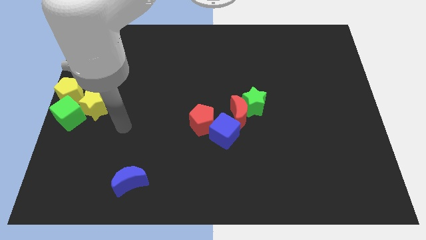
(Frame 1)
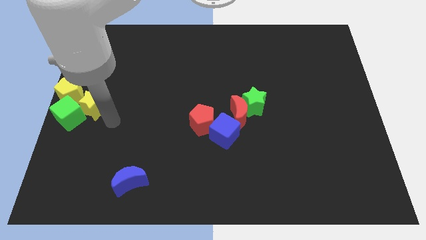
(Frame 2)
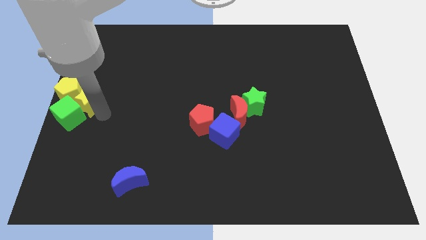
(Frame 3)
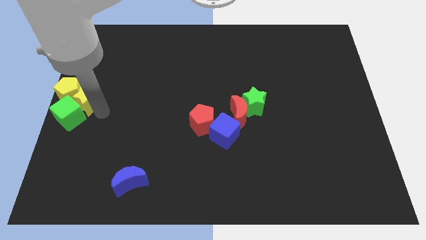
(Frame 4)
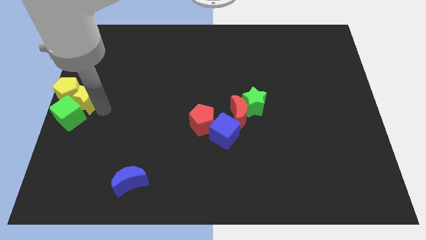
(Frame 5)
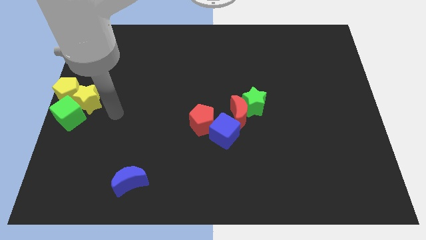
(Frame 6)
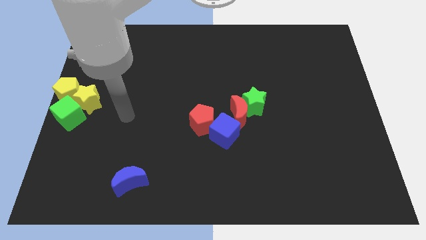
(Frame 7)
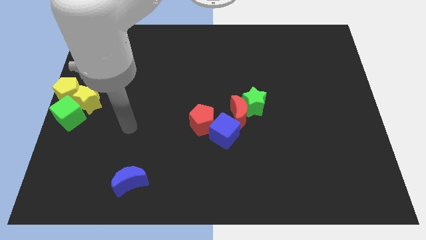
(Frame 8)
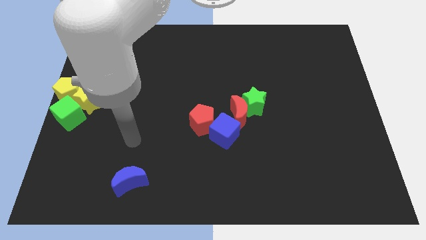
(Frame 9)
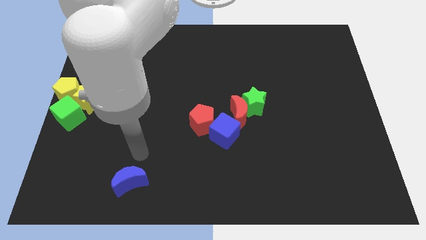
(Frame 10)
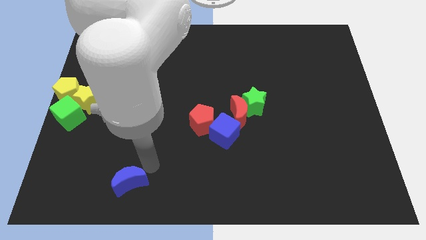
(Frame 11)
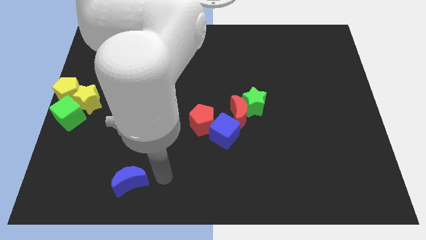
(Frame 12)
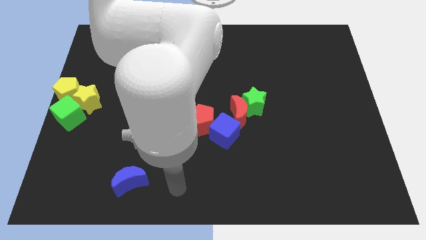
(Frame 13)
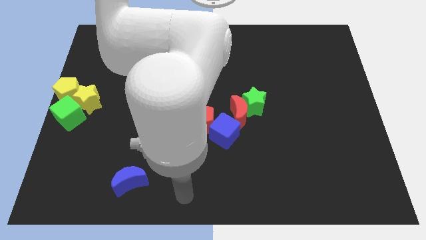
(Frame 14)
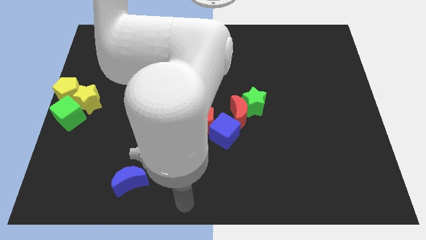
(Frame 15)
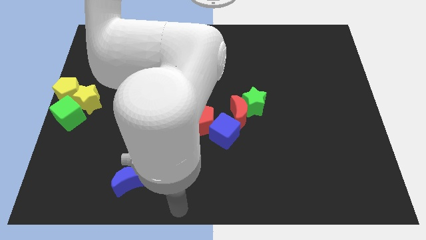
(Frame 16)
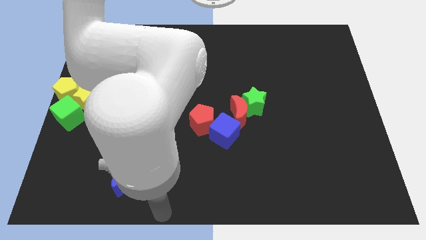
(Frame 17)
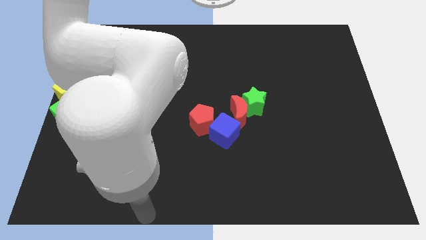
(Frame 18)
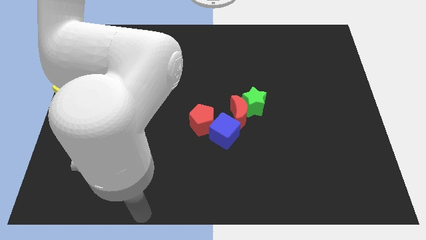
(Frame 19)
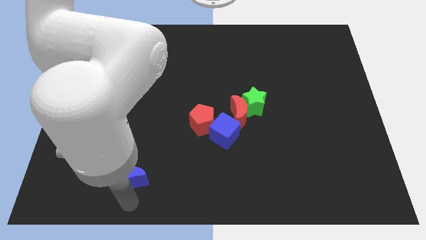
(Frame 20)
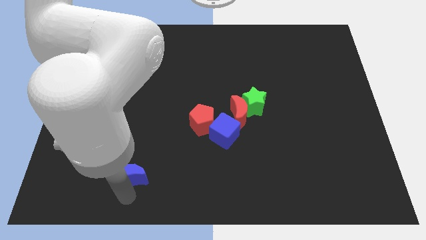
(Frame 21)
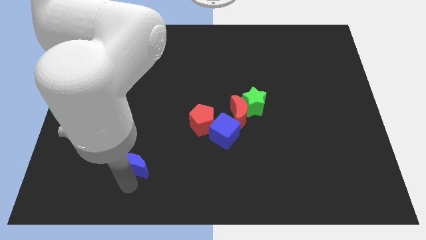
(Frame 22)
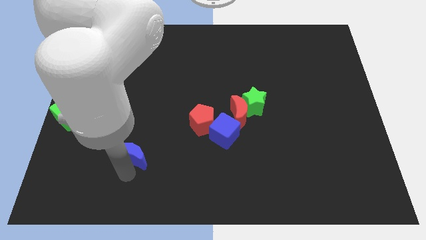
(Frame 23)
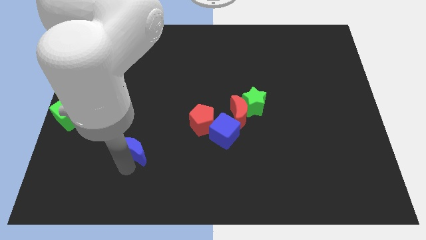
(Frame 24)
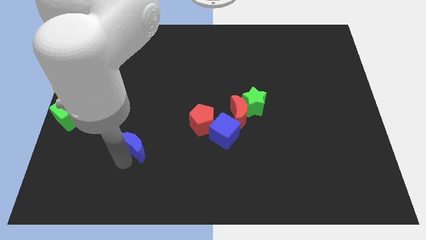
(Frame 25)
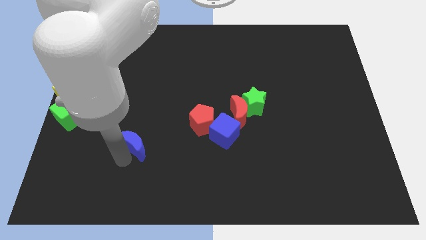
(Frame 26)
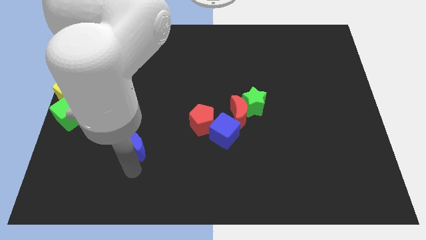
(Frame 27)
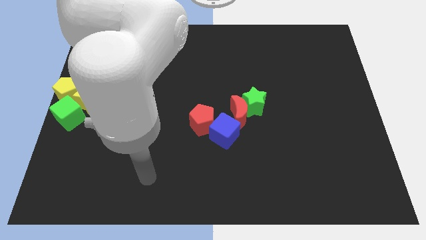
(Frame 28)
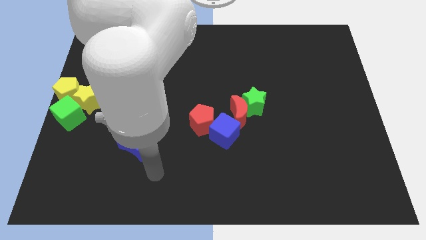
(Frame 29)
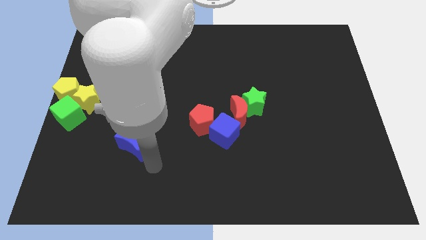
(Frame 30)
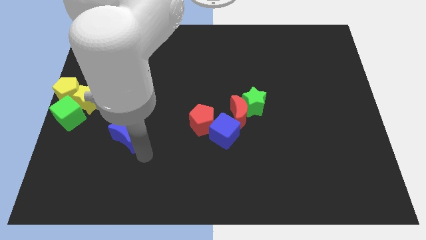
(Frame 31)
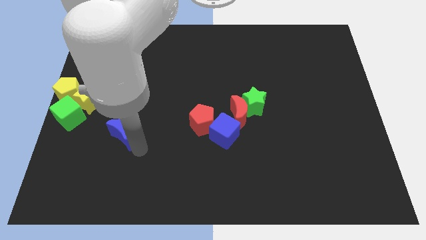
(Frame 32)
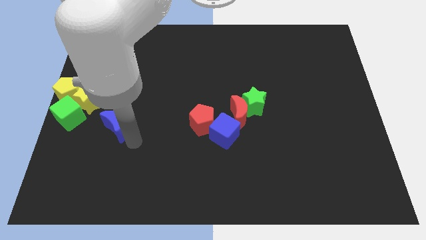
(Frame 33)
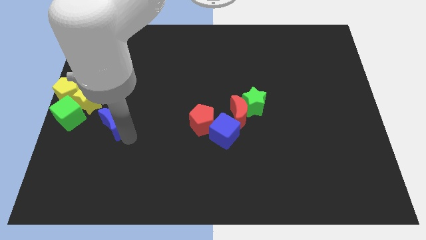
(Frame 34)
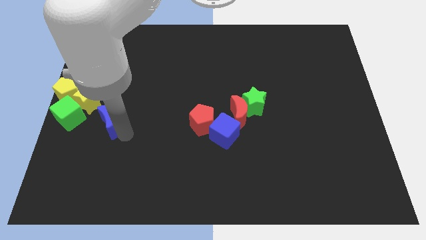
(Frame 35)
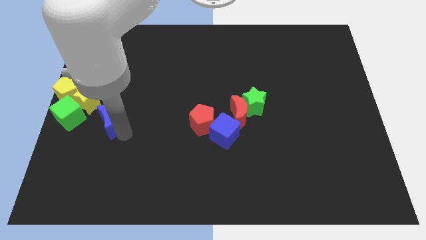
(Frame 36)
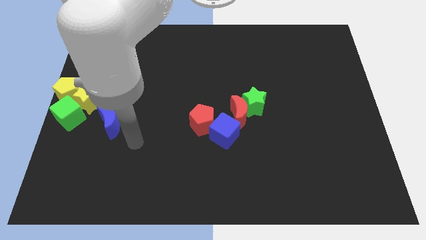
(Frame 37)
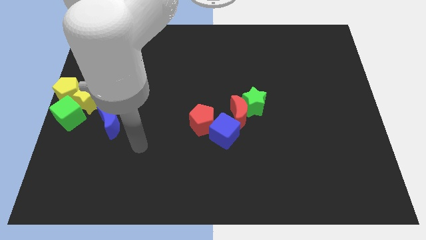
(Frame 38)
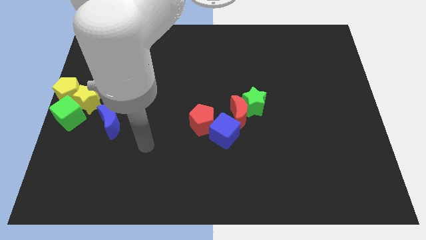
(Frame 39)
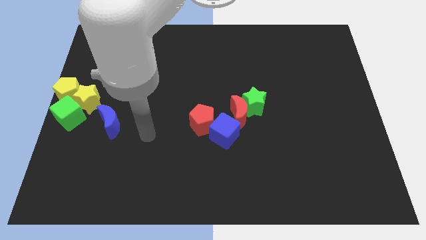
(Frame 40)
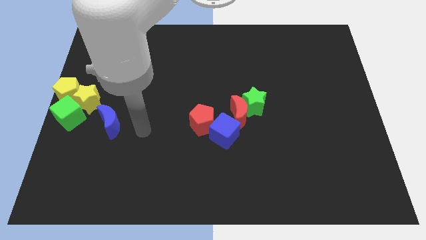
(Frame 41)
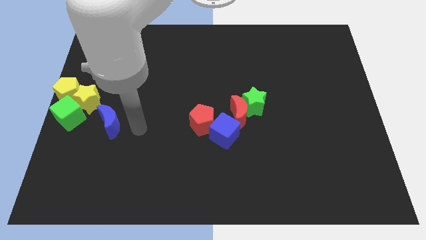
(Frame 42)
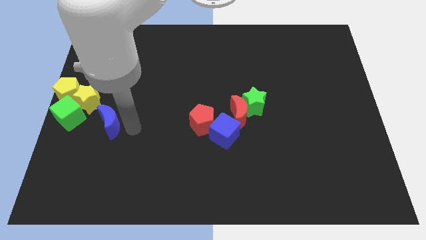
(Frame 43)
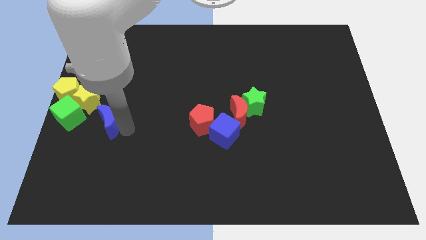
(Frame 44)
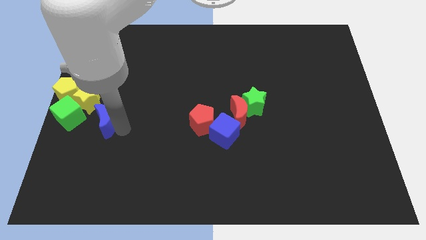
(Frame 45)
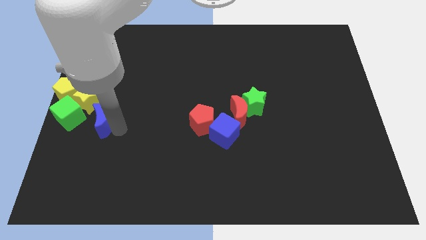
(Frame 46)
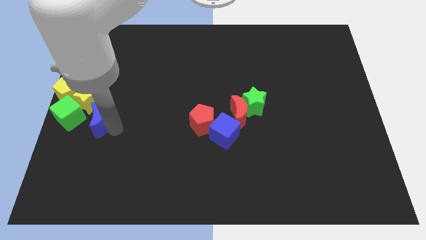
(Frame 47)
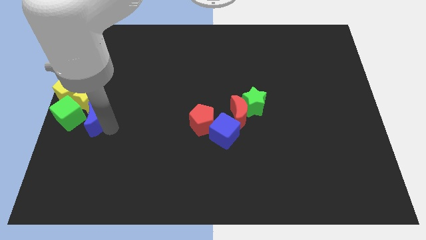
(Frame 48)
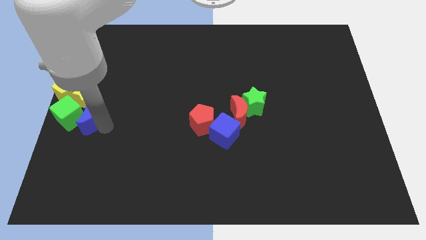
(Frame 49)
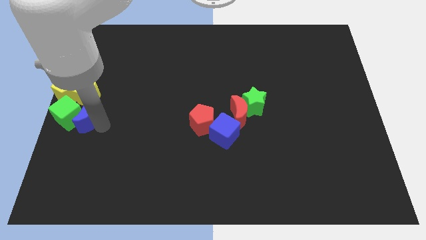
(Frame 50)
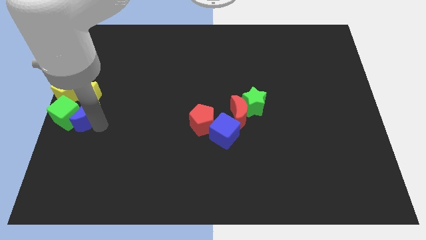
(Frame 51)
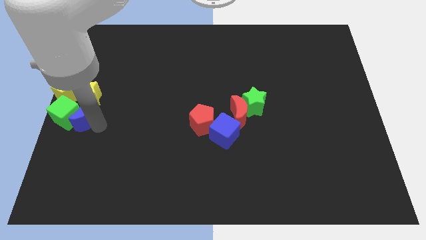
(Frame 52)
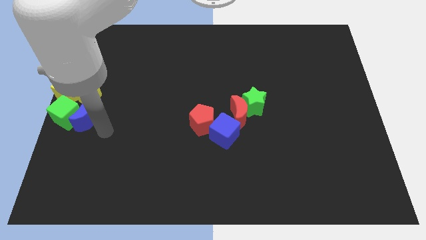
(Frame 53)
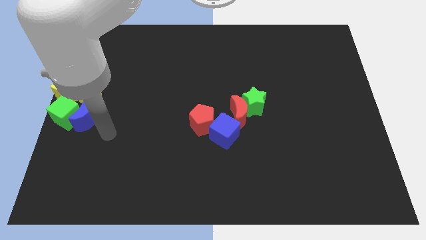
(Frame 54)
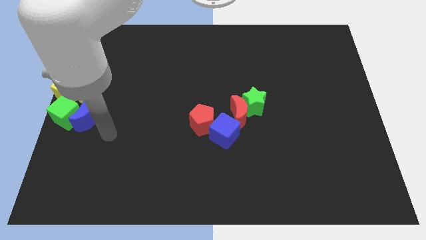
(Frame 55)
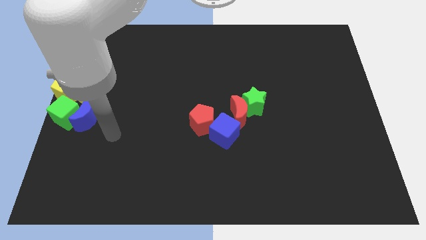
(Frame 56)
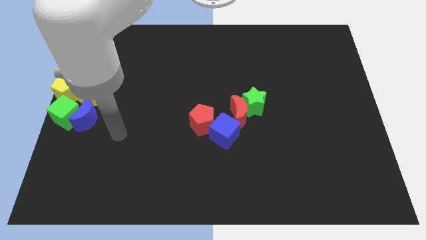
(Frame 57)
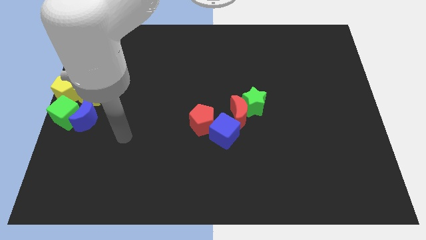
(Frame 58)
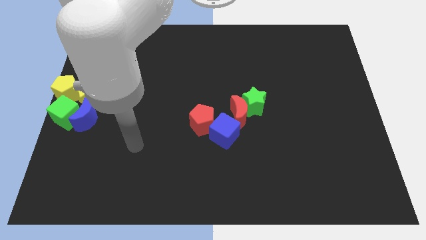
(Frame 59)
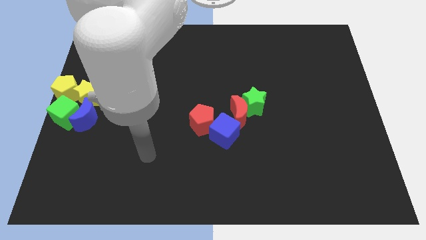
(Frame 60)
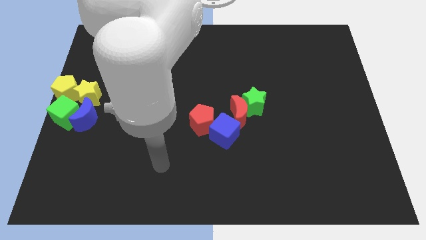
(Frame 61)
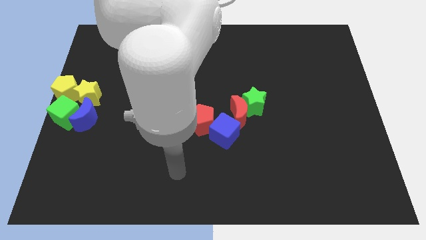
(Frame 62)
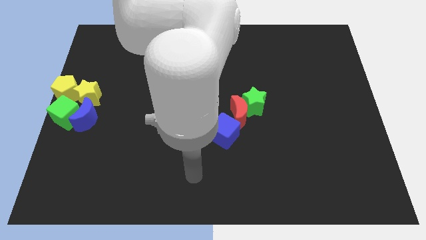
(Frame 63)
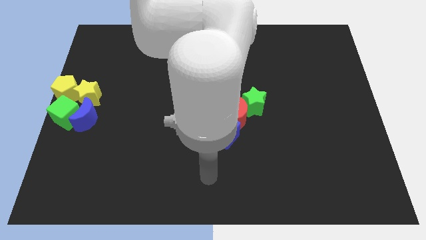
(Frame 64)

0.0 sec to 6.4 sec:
push the blue crescent into the right of the green cube

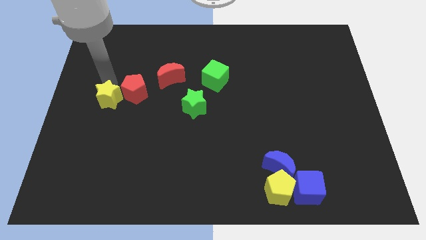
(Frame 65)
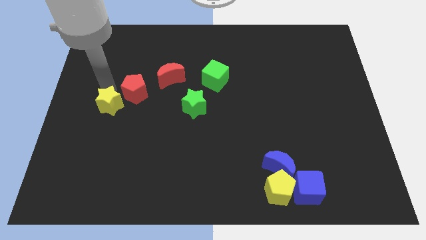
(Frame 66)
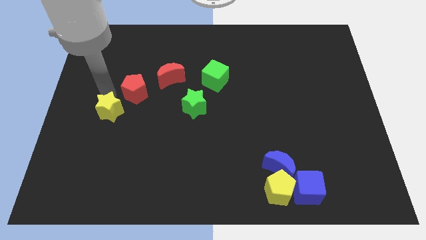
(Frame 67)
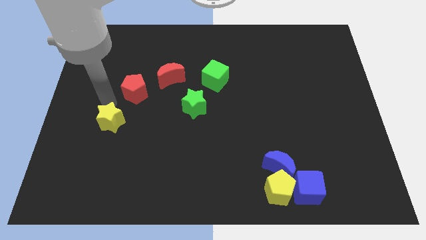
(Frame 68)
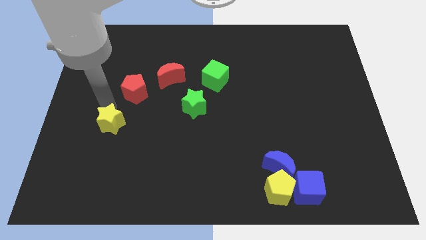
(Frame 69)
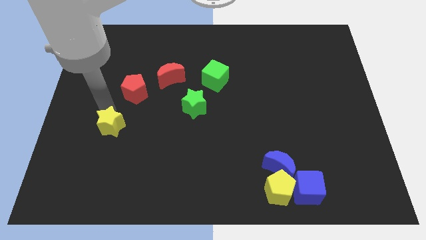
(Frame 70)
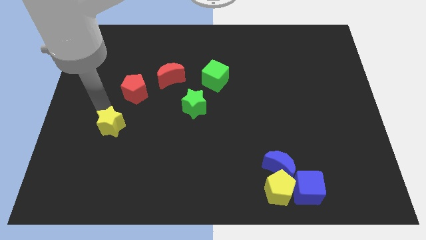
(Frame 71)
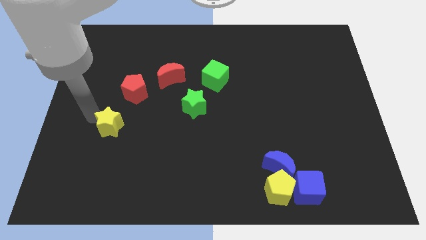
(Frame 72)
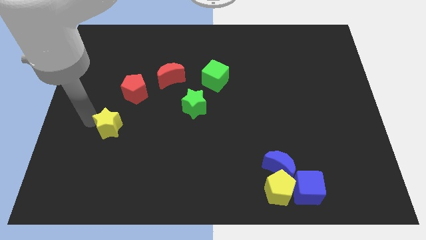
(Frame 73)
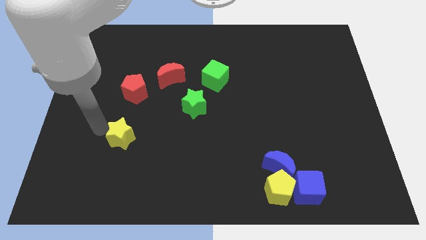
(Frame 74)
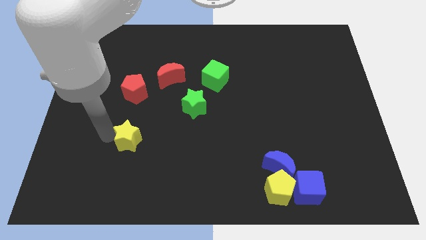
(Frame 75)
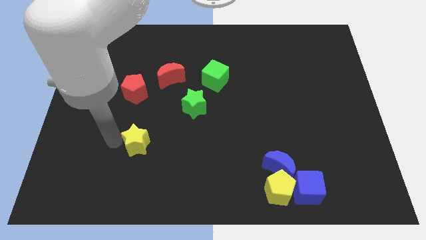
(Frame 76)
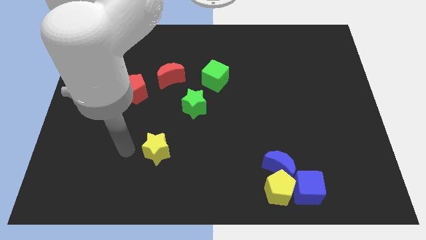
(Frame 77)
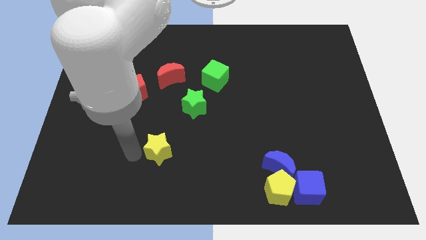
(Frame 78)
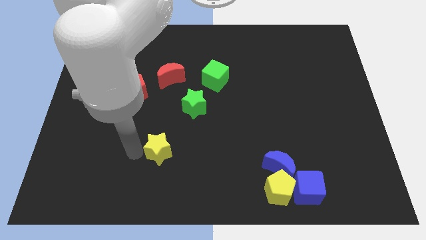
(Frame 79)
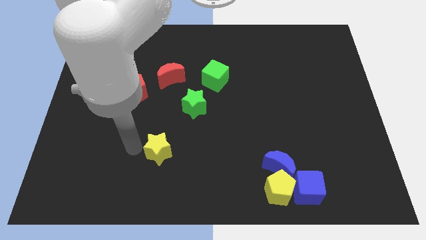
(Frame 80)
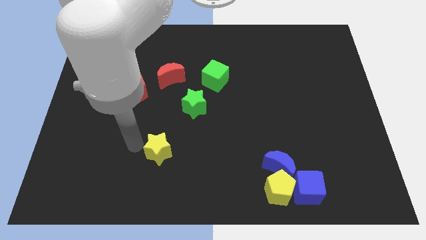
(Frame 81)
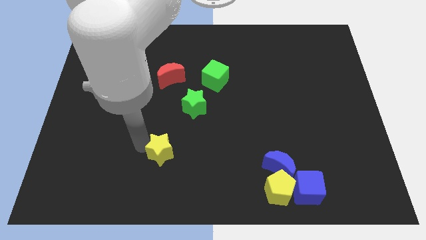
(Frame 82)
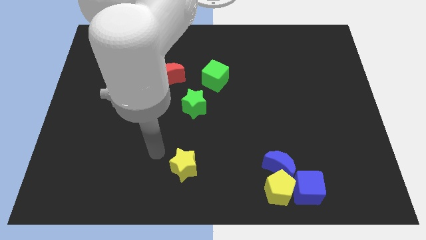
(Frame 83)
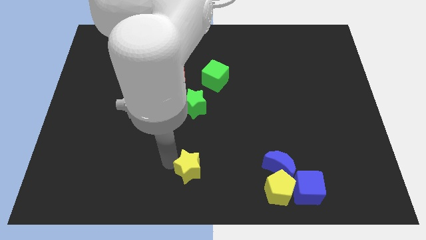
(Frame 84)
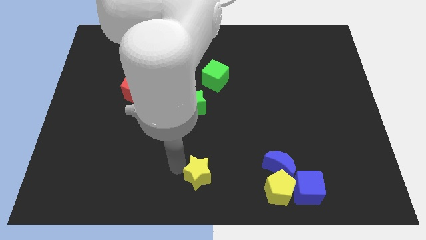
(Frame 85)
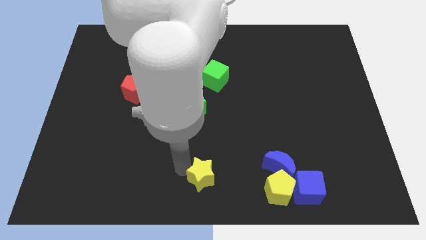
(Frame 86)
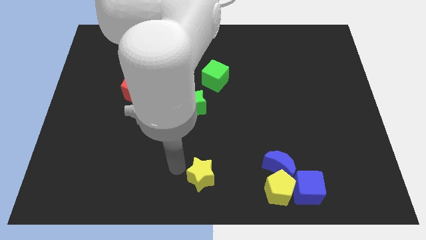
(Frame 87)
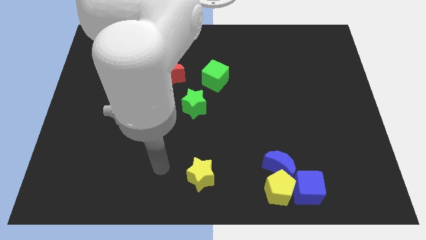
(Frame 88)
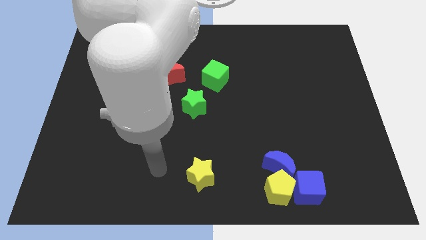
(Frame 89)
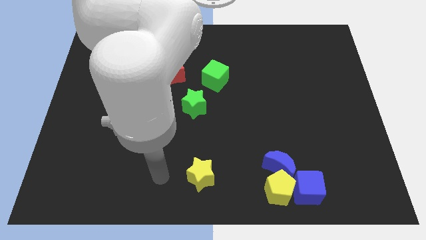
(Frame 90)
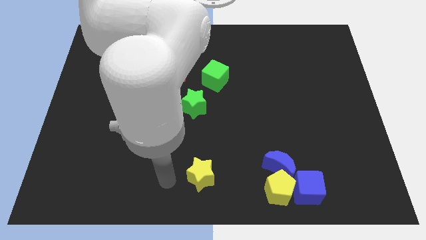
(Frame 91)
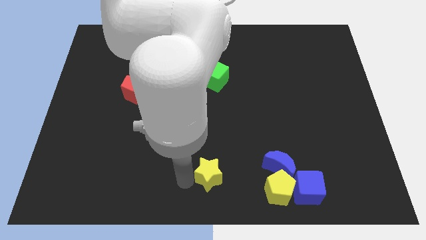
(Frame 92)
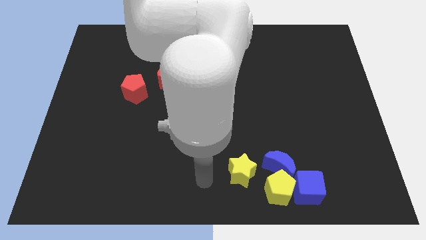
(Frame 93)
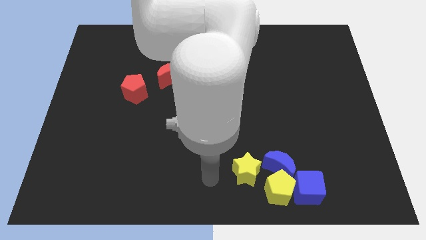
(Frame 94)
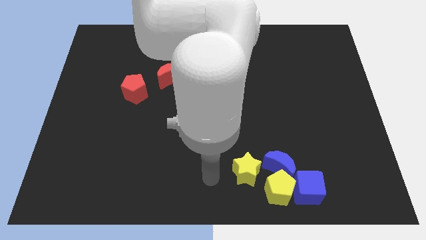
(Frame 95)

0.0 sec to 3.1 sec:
push the yellow star towards the left of the yellow pentagon
